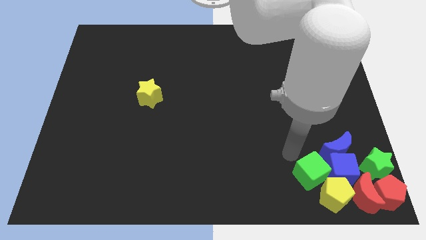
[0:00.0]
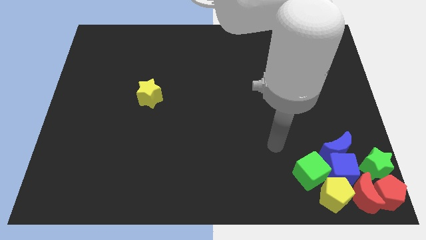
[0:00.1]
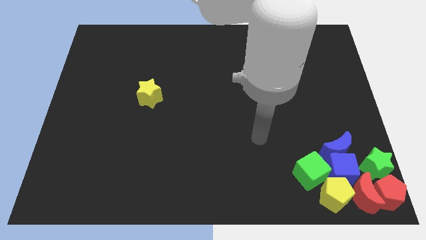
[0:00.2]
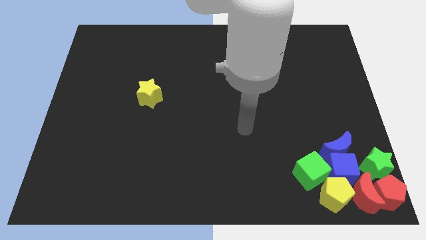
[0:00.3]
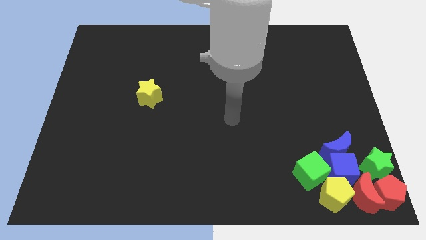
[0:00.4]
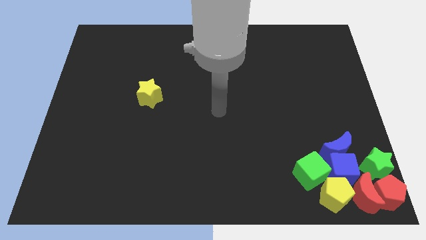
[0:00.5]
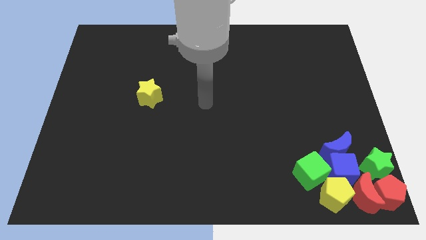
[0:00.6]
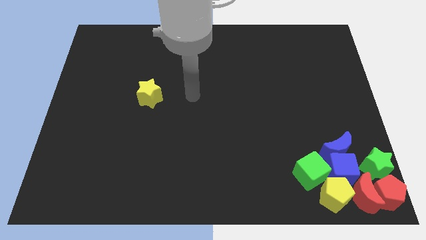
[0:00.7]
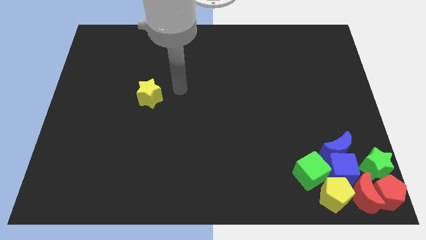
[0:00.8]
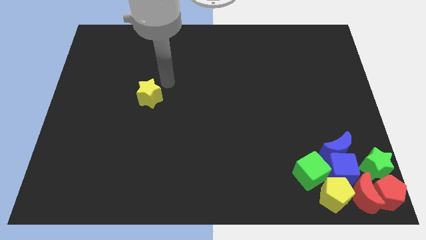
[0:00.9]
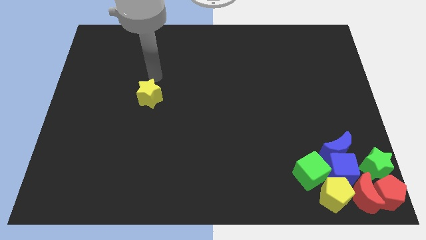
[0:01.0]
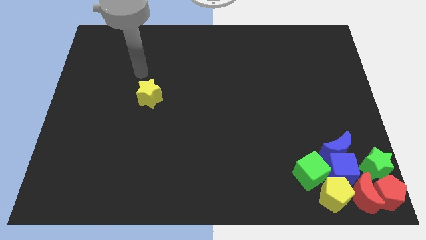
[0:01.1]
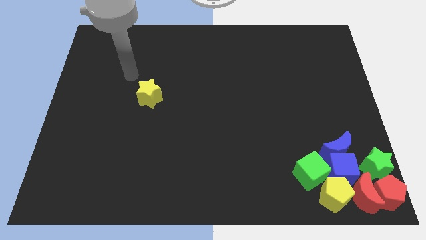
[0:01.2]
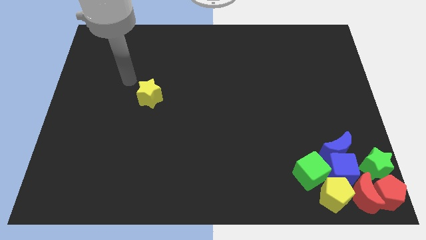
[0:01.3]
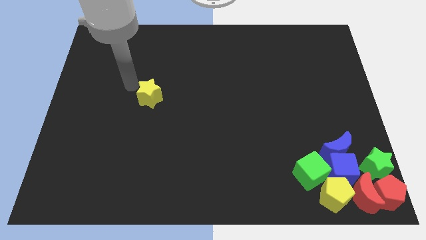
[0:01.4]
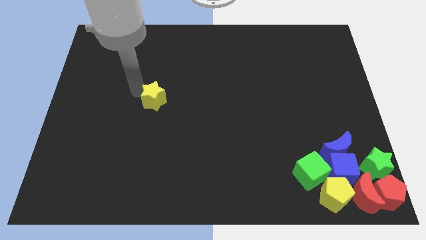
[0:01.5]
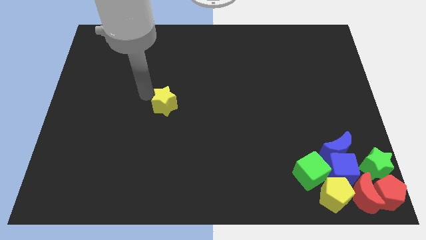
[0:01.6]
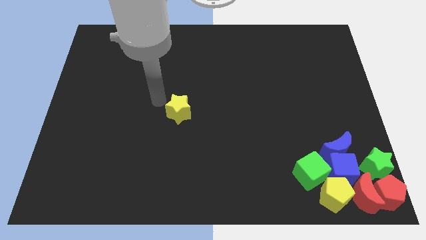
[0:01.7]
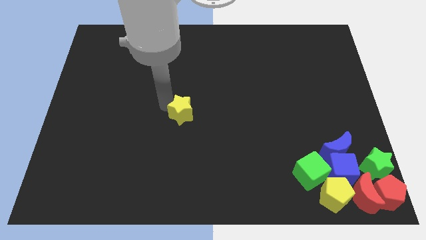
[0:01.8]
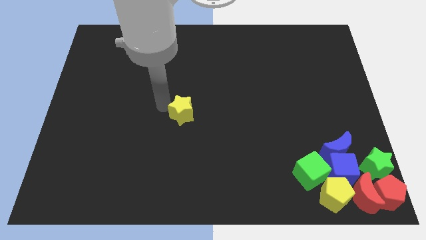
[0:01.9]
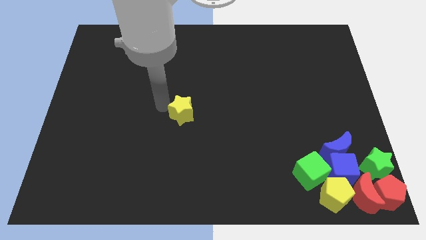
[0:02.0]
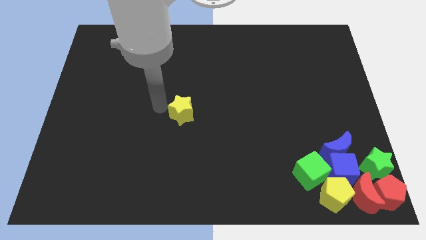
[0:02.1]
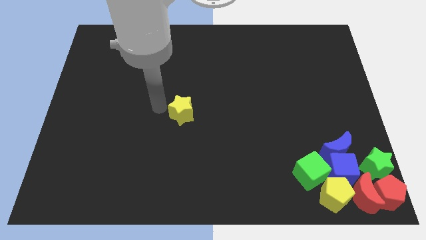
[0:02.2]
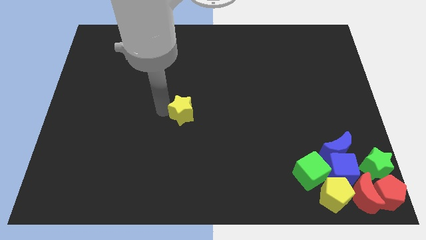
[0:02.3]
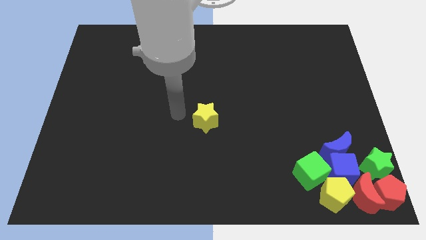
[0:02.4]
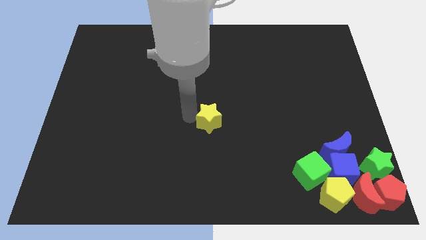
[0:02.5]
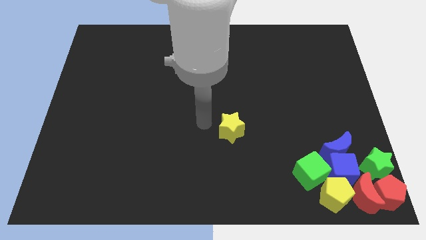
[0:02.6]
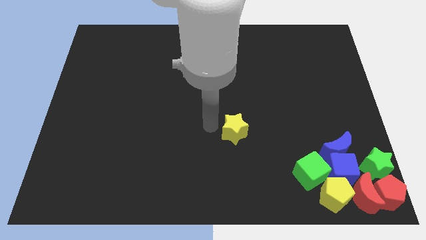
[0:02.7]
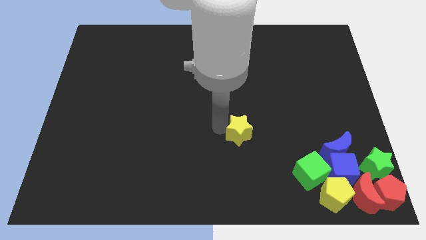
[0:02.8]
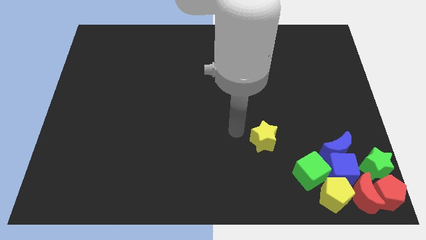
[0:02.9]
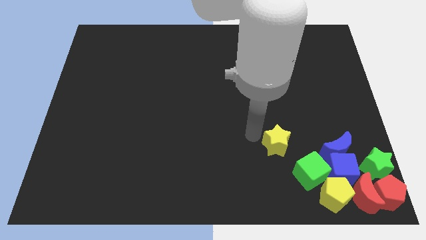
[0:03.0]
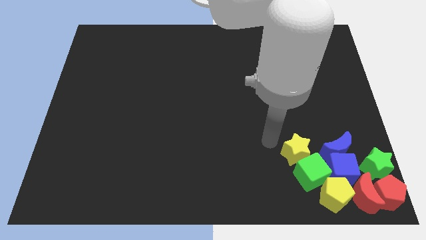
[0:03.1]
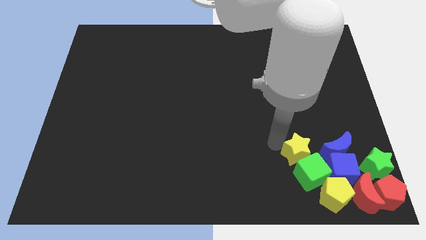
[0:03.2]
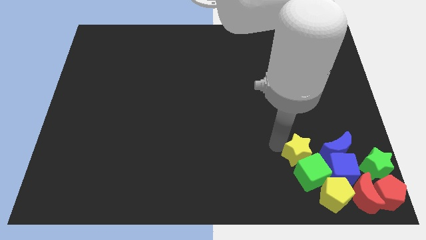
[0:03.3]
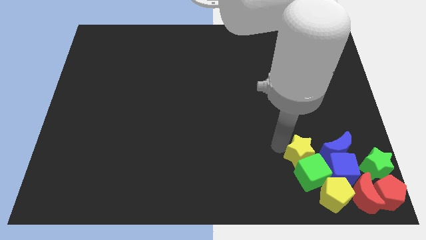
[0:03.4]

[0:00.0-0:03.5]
push the yellow star into the top side of the green cube

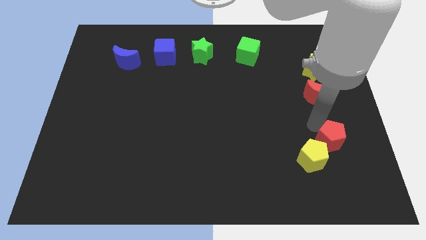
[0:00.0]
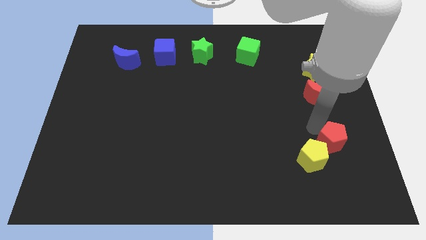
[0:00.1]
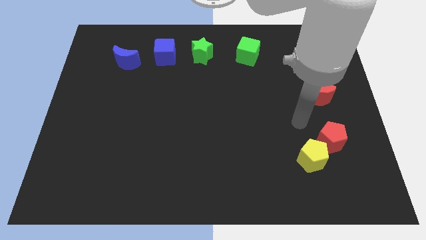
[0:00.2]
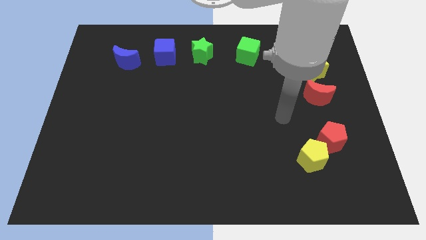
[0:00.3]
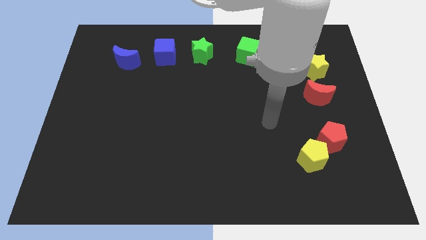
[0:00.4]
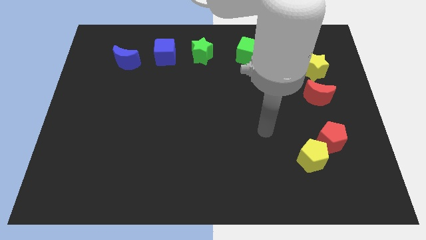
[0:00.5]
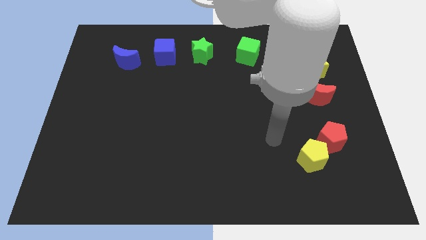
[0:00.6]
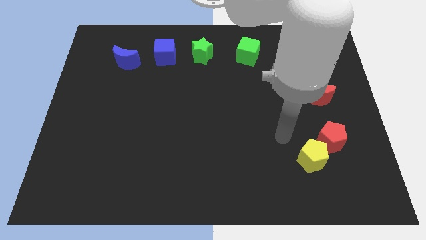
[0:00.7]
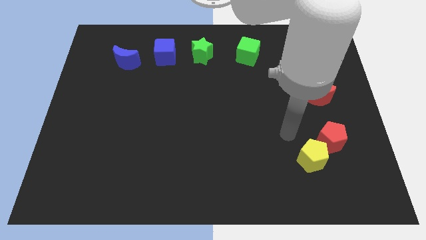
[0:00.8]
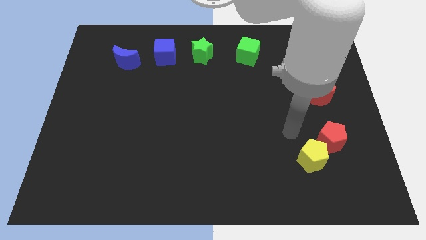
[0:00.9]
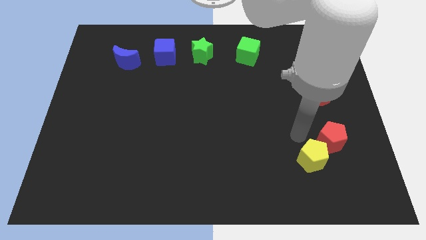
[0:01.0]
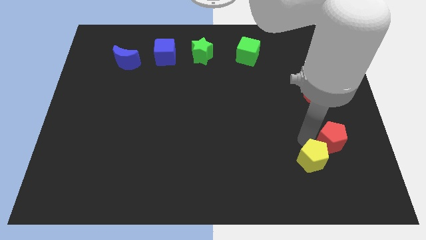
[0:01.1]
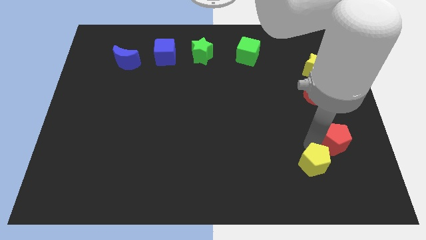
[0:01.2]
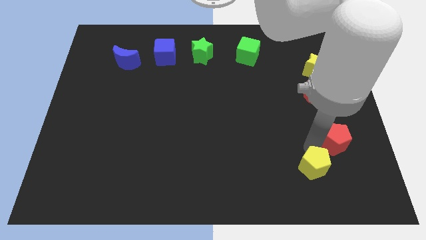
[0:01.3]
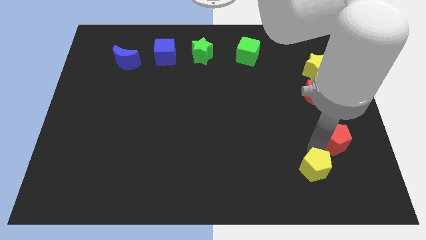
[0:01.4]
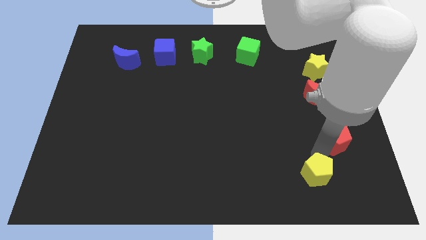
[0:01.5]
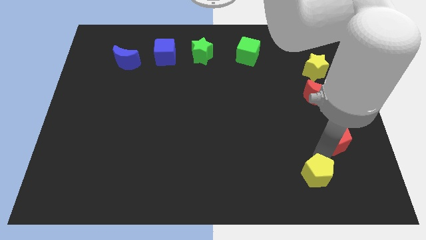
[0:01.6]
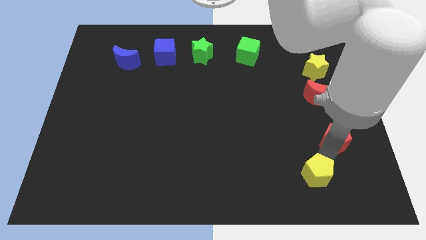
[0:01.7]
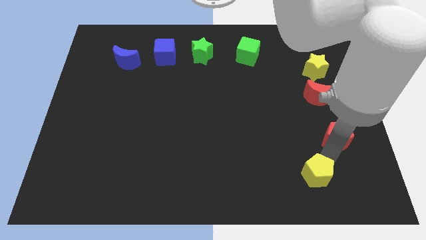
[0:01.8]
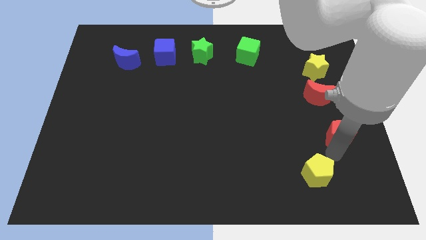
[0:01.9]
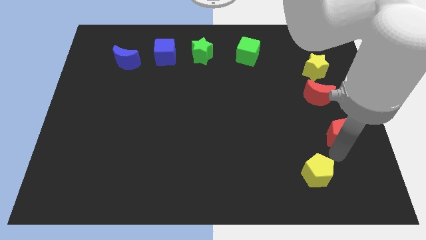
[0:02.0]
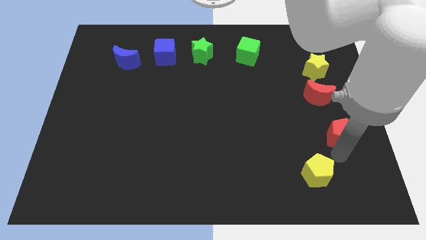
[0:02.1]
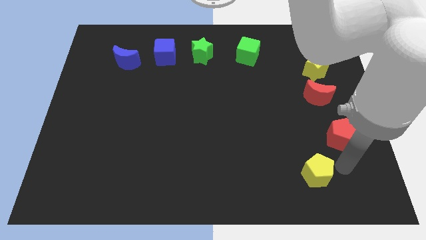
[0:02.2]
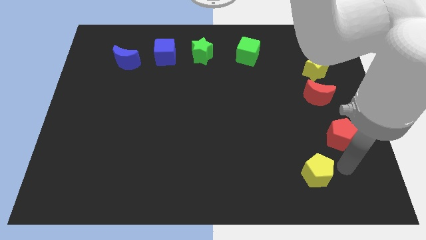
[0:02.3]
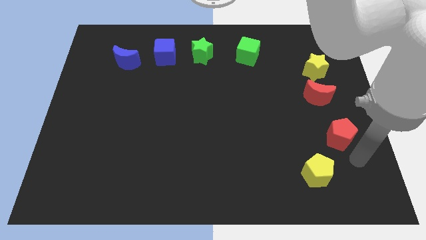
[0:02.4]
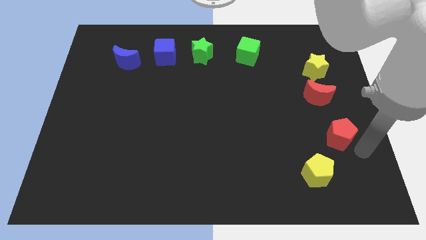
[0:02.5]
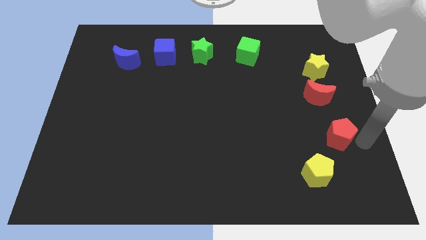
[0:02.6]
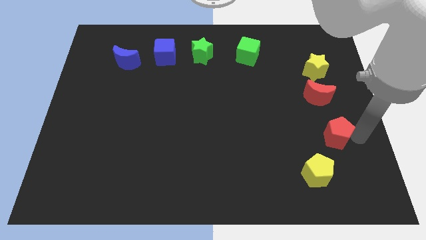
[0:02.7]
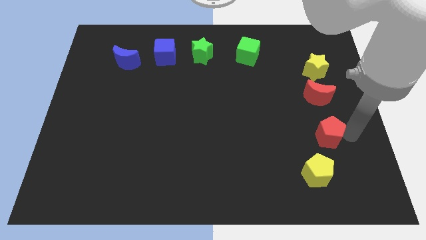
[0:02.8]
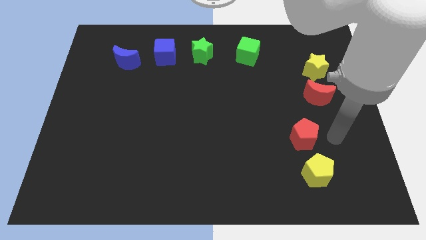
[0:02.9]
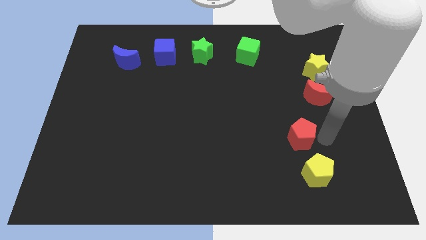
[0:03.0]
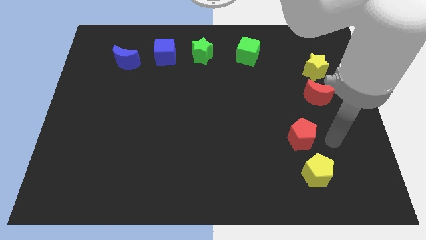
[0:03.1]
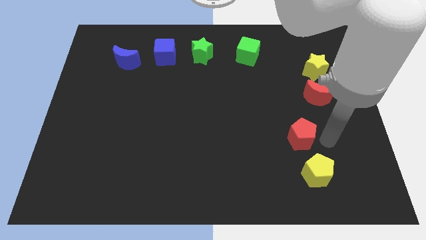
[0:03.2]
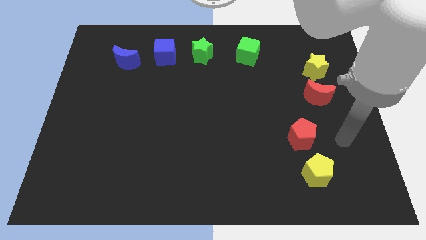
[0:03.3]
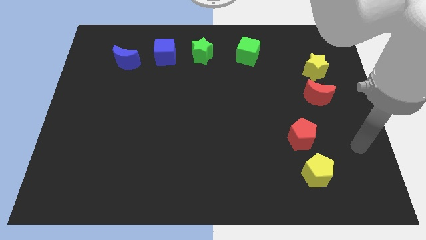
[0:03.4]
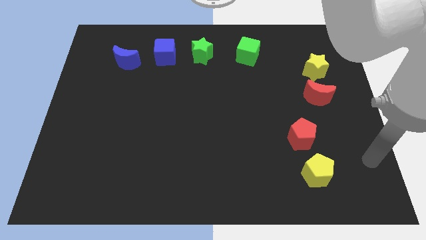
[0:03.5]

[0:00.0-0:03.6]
separate the yellow pentagon and red pentagon

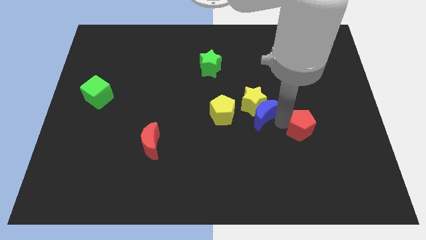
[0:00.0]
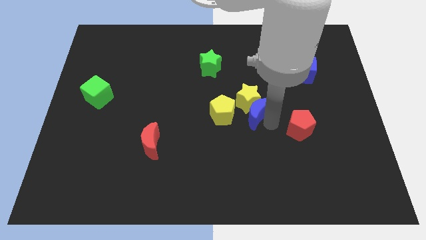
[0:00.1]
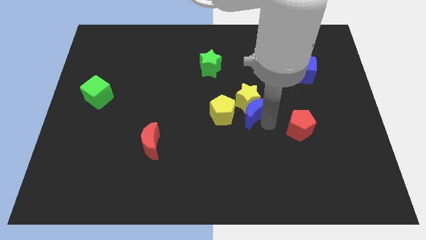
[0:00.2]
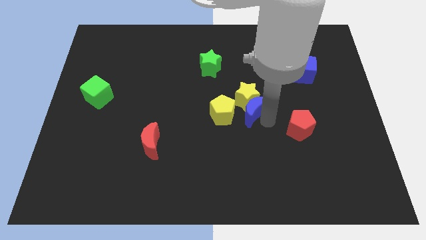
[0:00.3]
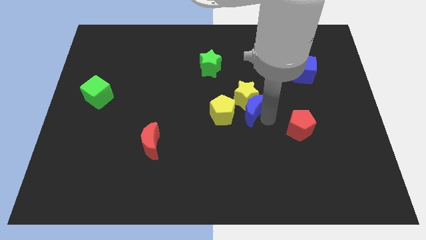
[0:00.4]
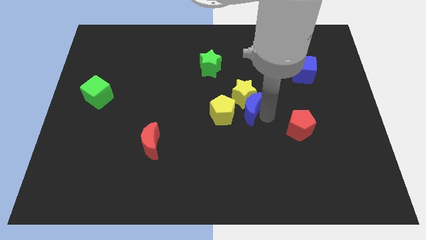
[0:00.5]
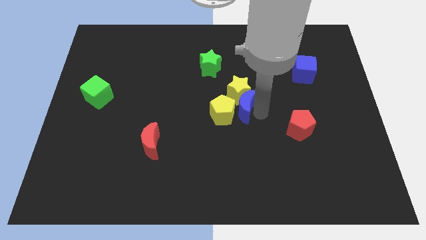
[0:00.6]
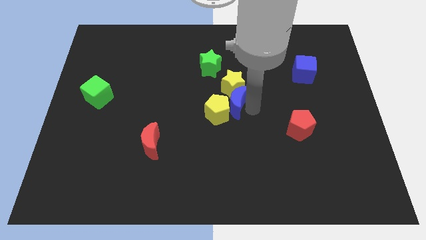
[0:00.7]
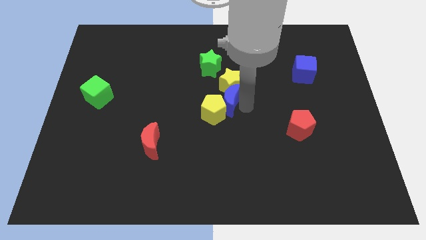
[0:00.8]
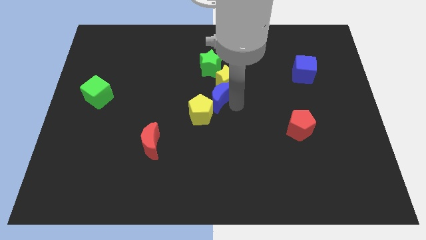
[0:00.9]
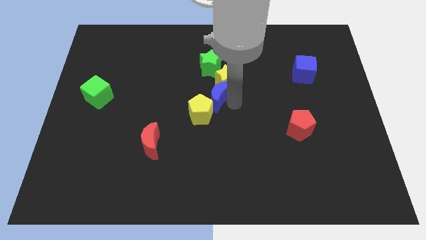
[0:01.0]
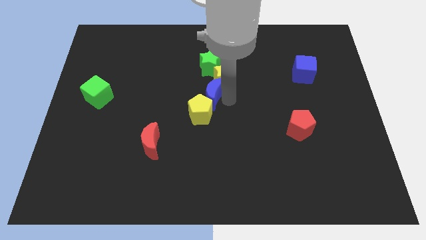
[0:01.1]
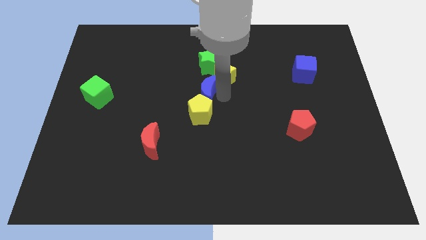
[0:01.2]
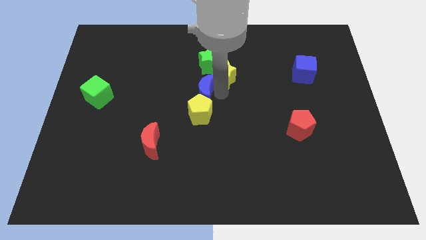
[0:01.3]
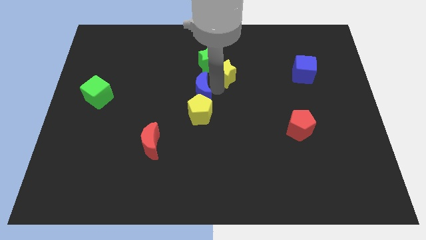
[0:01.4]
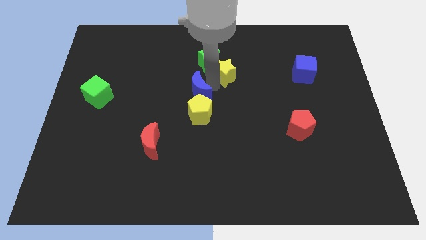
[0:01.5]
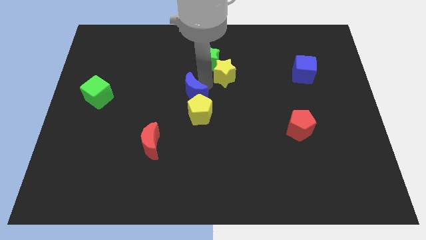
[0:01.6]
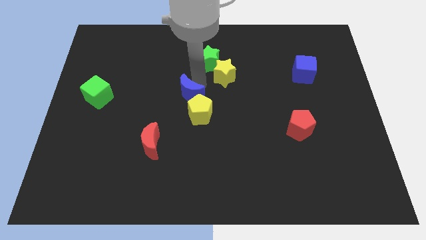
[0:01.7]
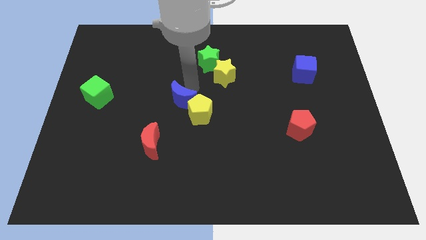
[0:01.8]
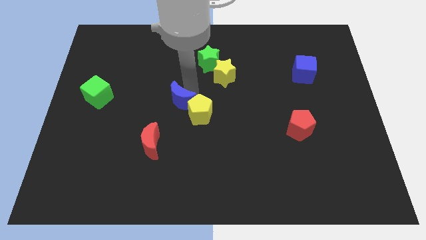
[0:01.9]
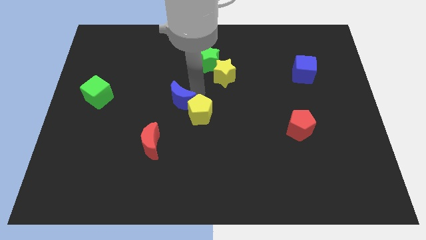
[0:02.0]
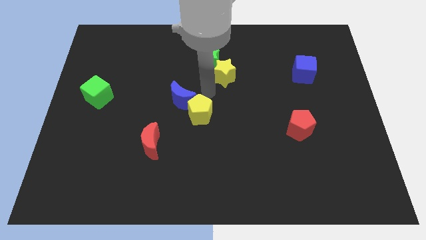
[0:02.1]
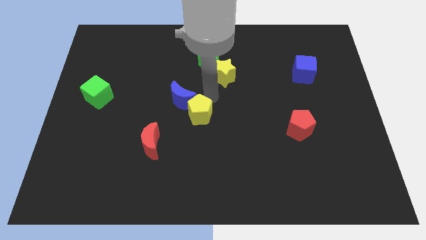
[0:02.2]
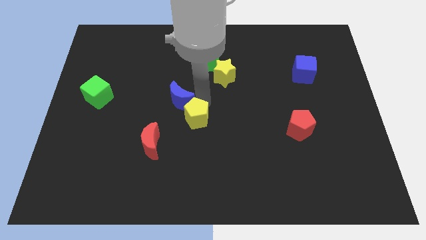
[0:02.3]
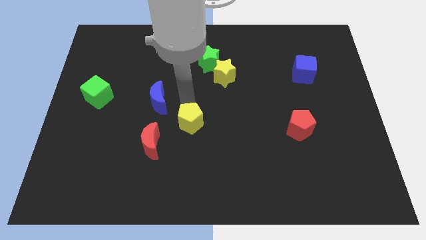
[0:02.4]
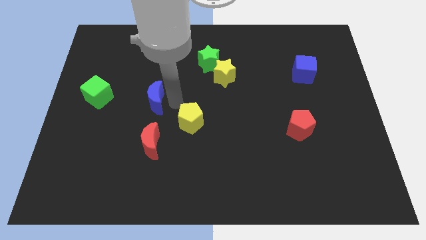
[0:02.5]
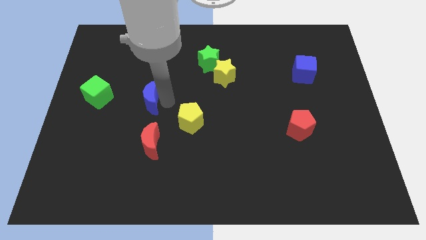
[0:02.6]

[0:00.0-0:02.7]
place the blue moon above the red moon
